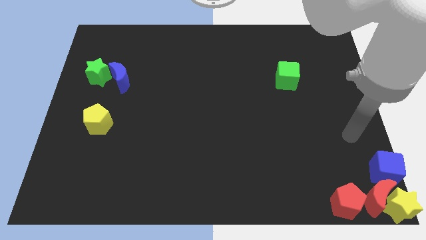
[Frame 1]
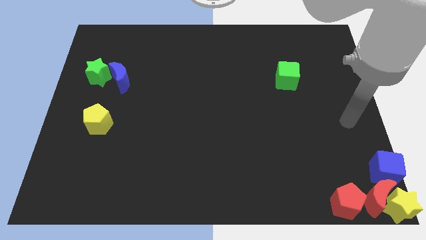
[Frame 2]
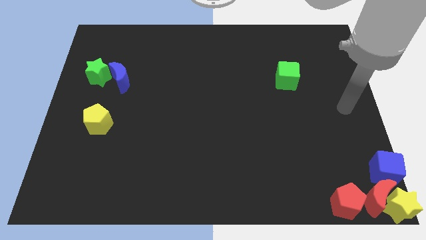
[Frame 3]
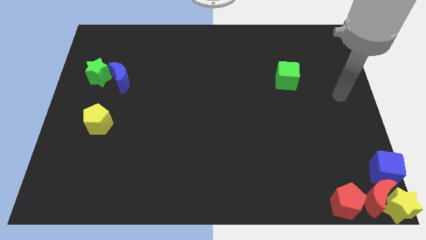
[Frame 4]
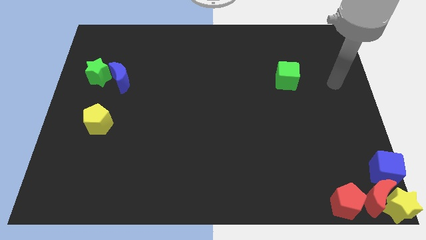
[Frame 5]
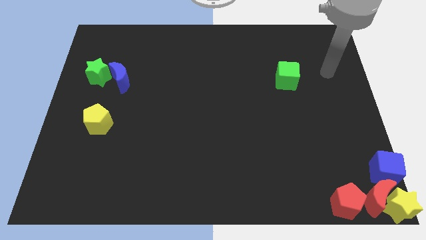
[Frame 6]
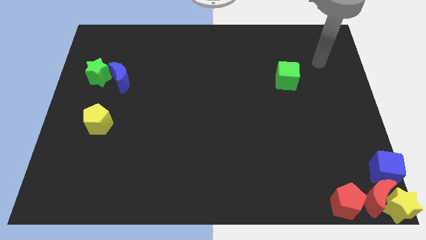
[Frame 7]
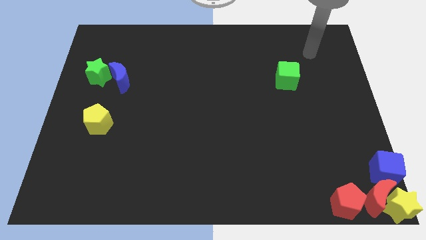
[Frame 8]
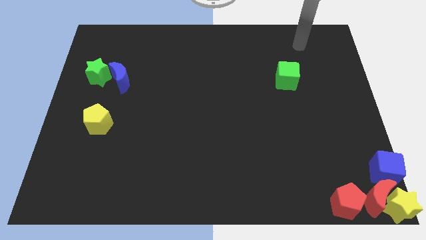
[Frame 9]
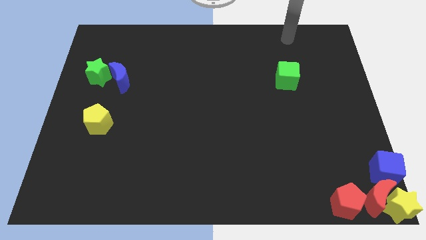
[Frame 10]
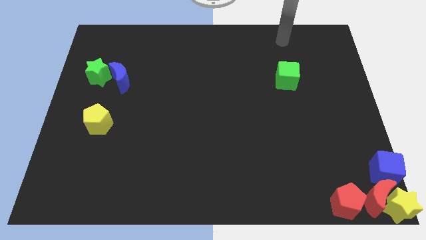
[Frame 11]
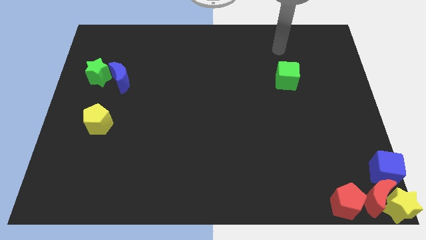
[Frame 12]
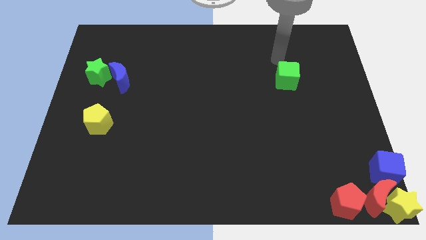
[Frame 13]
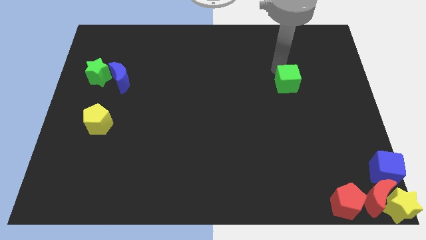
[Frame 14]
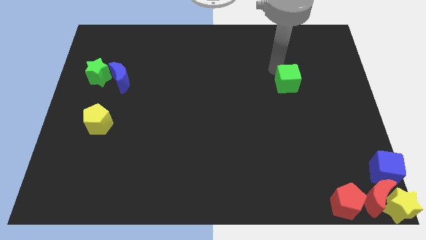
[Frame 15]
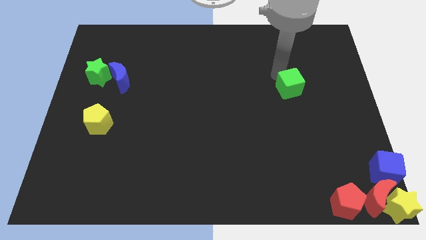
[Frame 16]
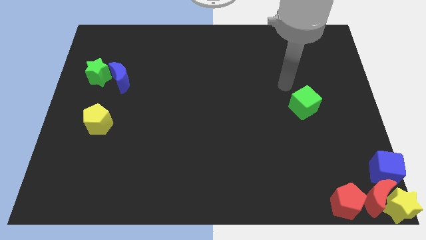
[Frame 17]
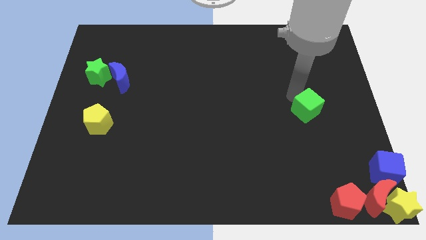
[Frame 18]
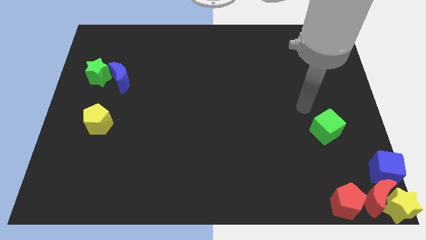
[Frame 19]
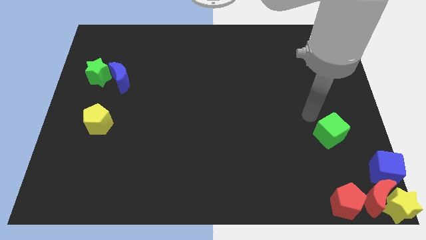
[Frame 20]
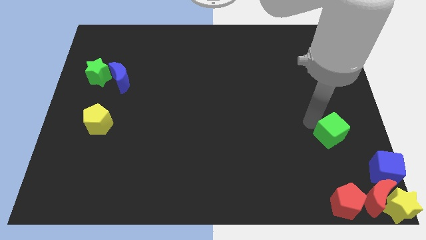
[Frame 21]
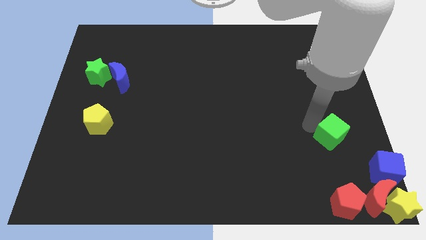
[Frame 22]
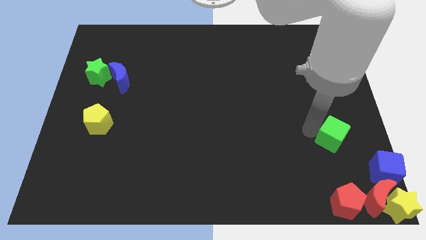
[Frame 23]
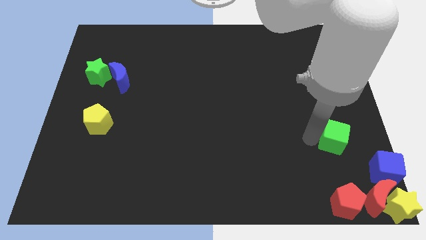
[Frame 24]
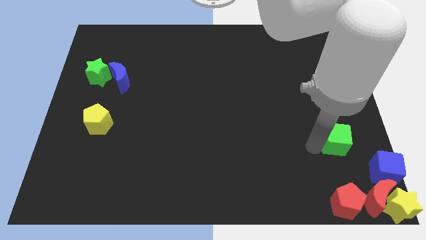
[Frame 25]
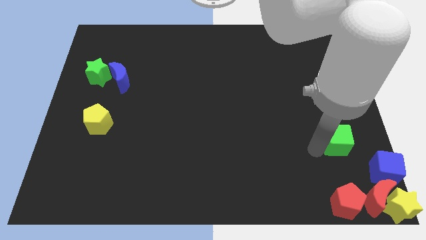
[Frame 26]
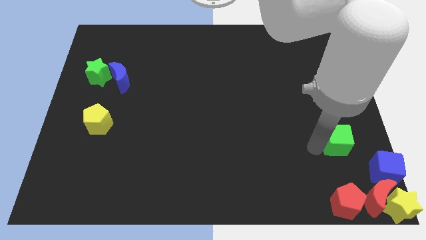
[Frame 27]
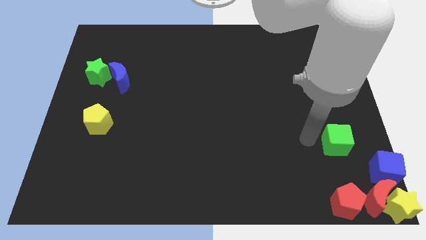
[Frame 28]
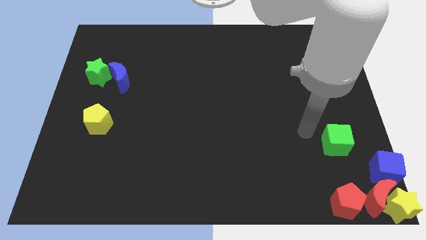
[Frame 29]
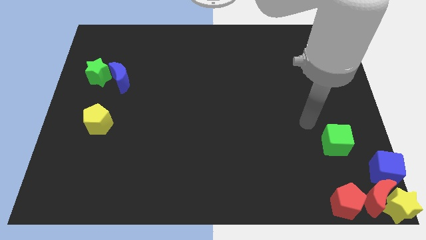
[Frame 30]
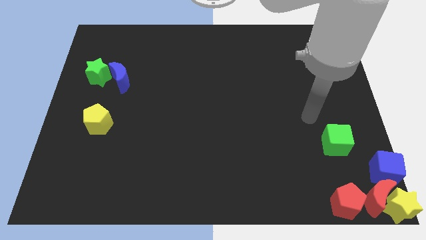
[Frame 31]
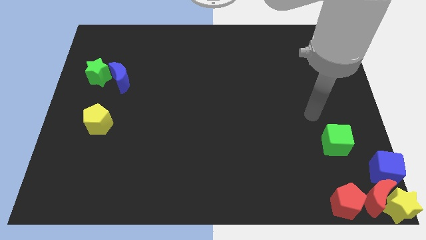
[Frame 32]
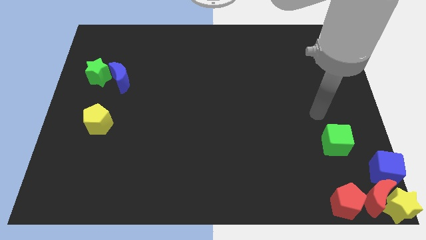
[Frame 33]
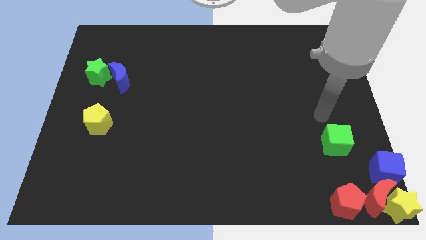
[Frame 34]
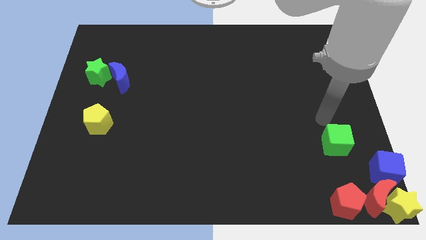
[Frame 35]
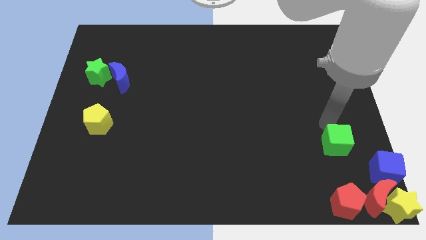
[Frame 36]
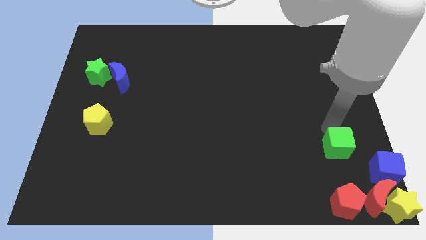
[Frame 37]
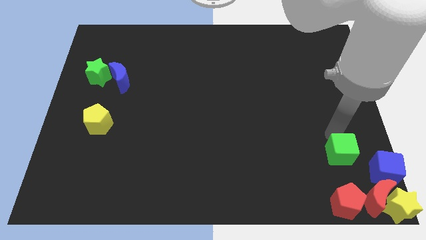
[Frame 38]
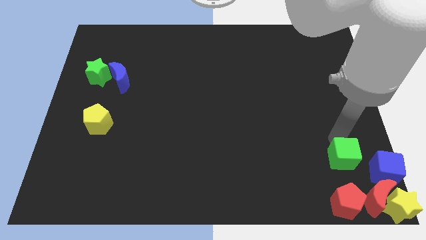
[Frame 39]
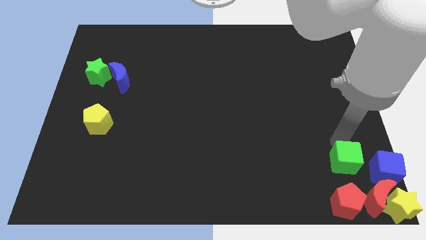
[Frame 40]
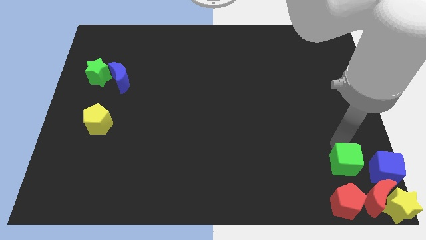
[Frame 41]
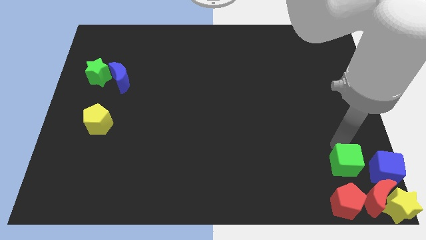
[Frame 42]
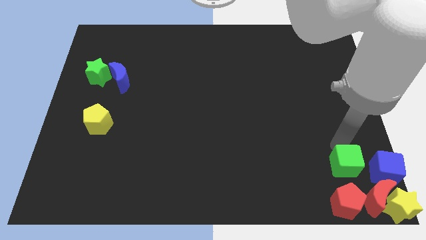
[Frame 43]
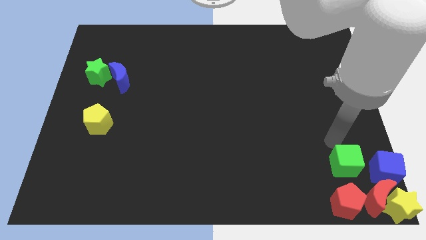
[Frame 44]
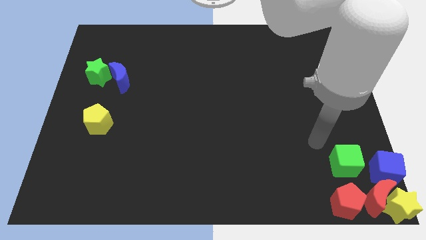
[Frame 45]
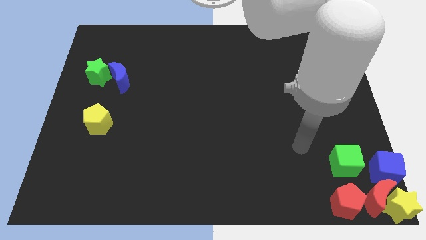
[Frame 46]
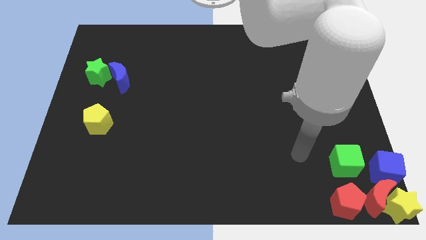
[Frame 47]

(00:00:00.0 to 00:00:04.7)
place the green cube at the top of the red pentagon

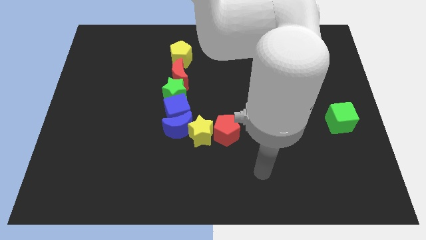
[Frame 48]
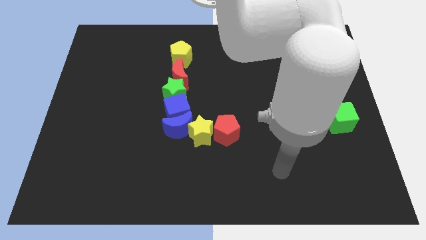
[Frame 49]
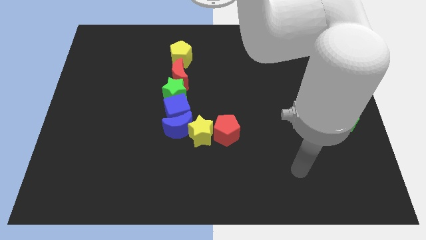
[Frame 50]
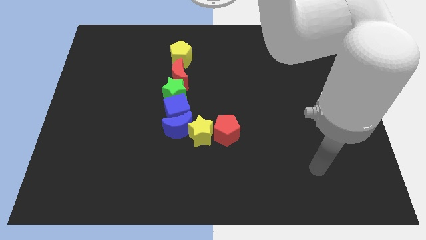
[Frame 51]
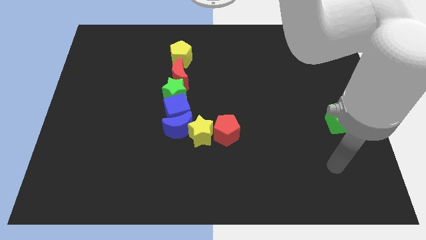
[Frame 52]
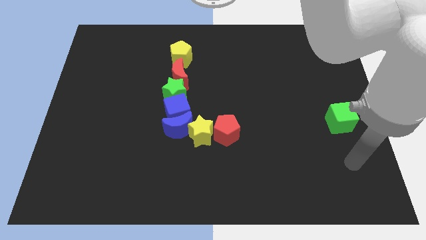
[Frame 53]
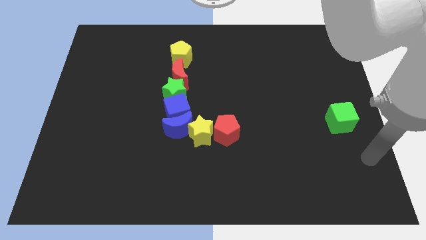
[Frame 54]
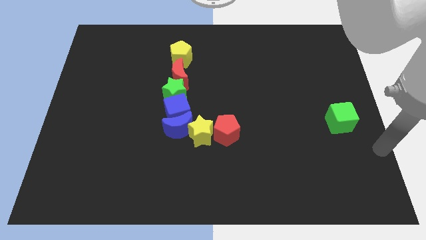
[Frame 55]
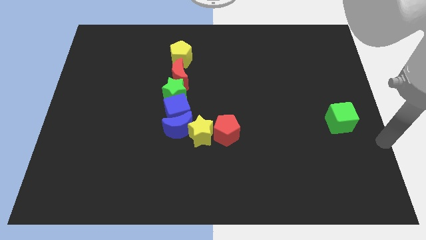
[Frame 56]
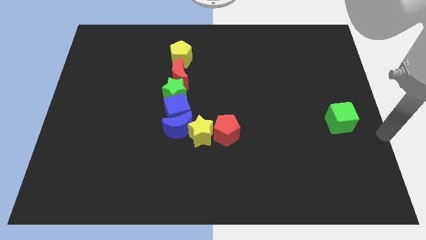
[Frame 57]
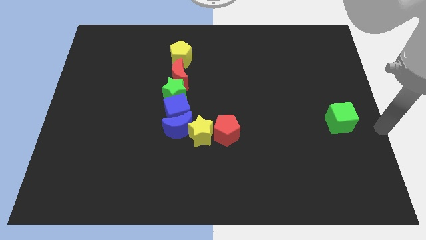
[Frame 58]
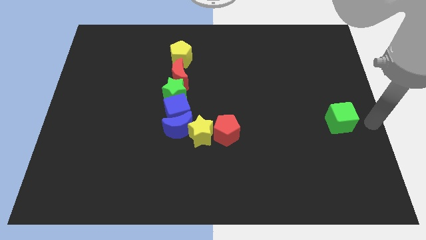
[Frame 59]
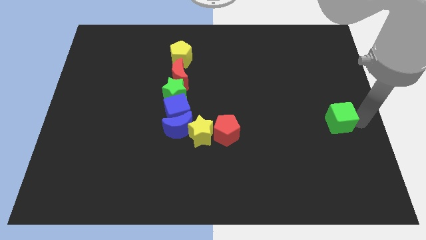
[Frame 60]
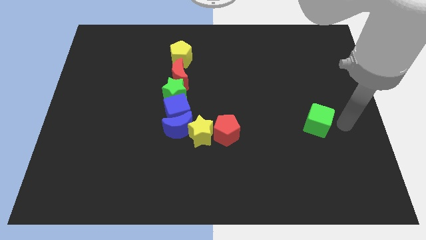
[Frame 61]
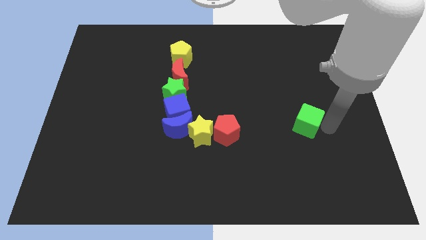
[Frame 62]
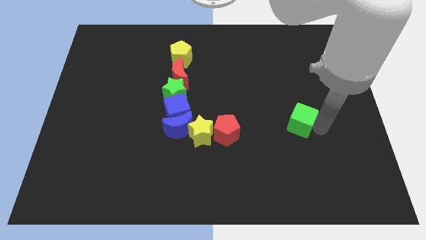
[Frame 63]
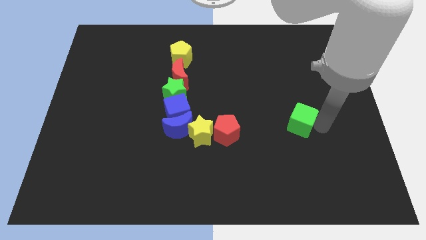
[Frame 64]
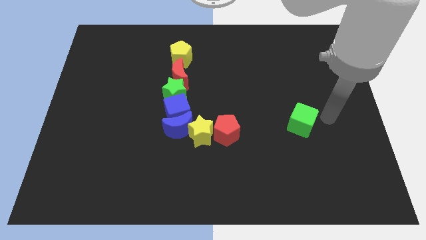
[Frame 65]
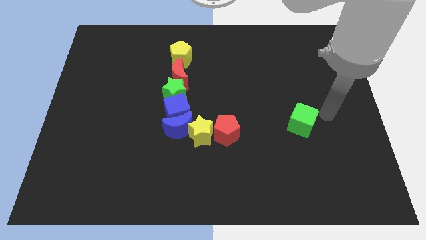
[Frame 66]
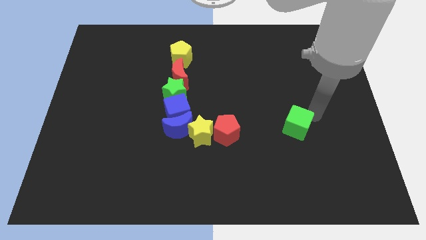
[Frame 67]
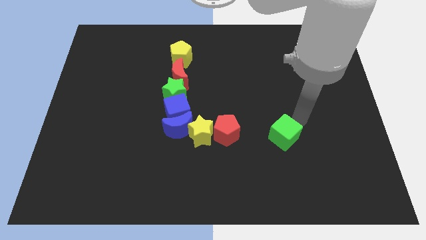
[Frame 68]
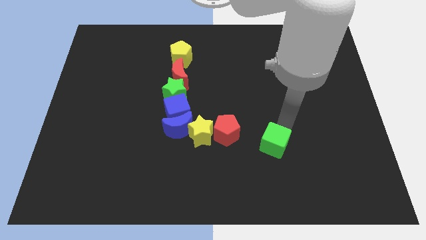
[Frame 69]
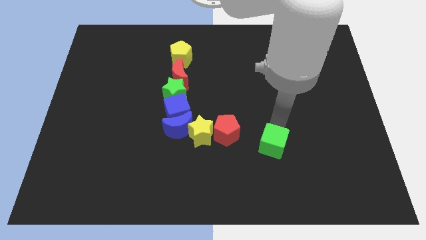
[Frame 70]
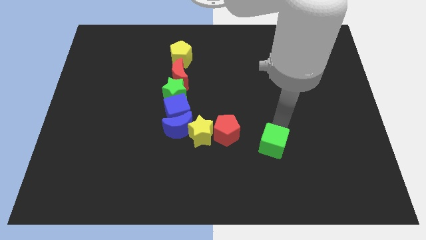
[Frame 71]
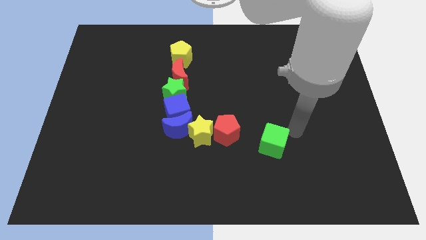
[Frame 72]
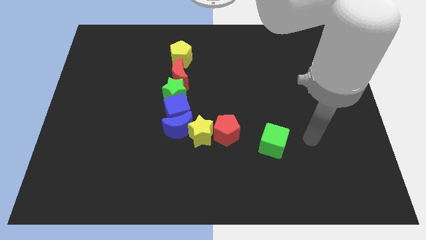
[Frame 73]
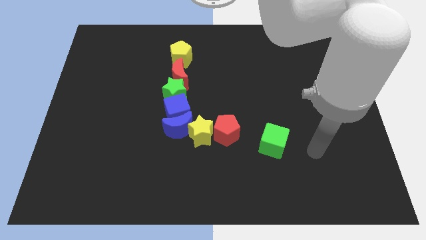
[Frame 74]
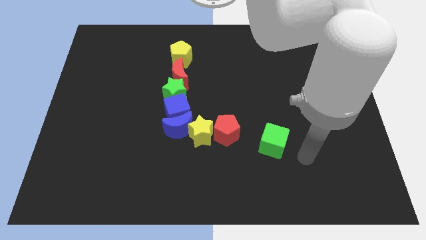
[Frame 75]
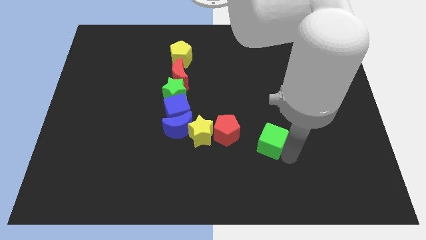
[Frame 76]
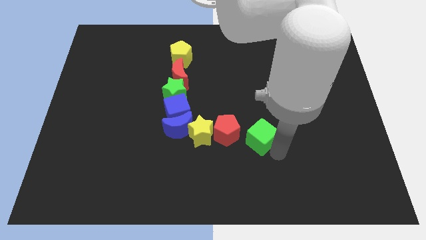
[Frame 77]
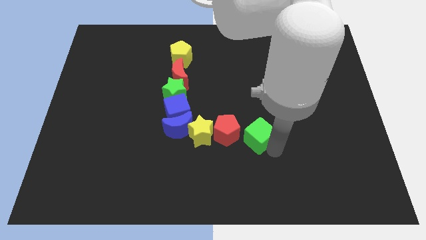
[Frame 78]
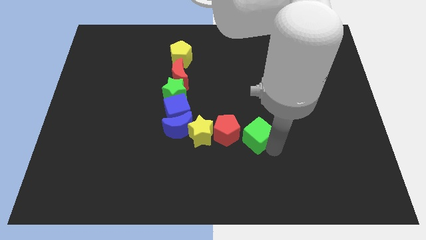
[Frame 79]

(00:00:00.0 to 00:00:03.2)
slide the green cube towards the red pentagon

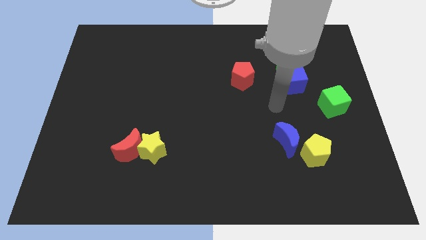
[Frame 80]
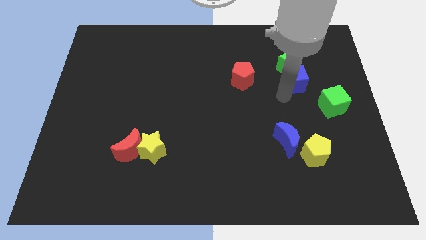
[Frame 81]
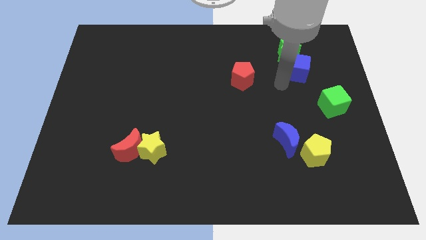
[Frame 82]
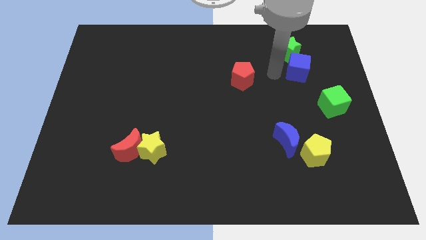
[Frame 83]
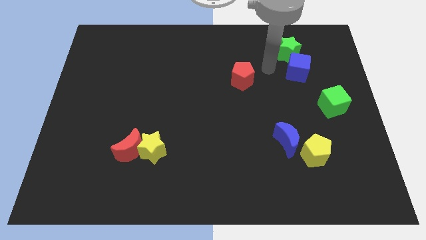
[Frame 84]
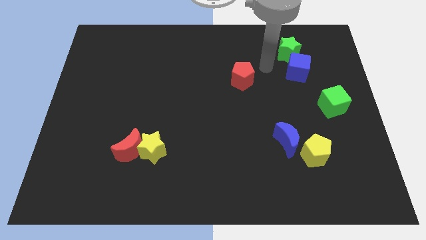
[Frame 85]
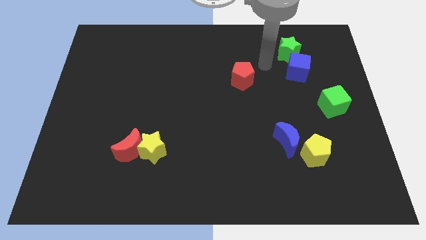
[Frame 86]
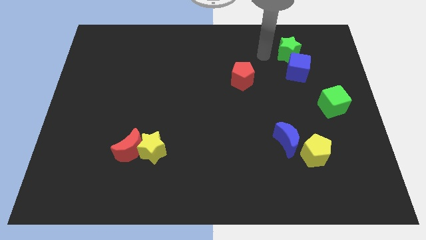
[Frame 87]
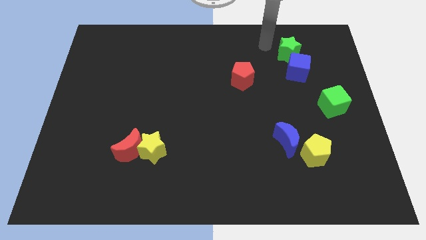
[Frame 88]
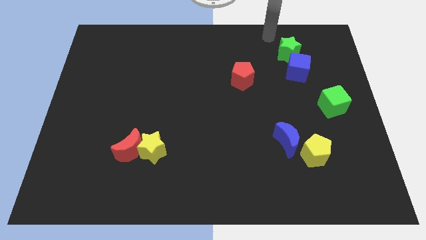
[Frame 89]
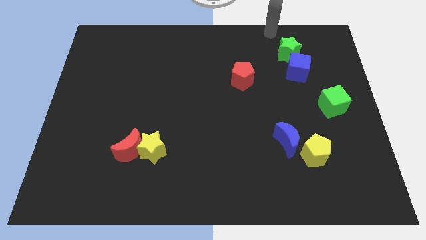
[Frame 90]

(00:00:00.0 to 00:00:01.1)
slide blue cube into green star

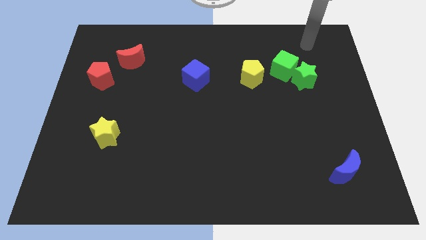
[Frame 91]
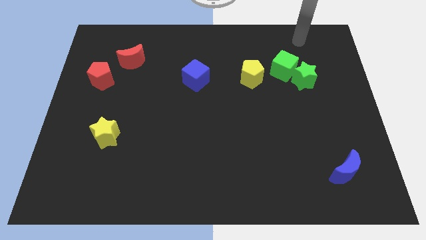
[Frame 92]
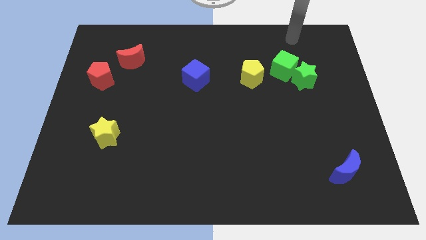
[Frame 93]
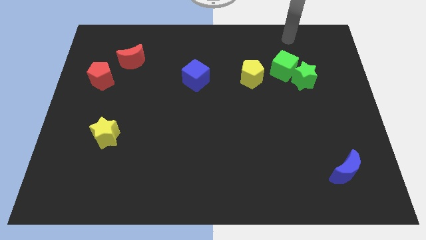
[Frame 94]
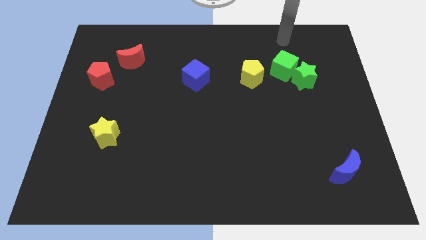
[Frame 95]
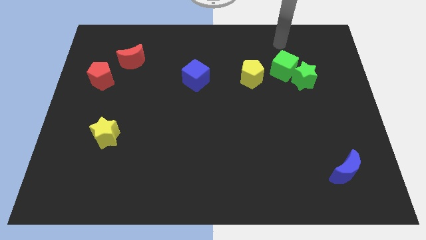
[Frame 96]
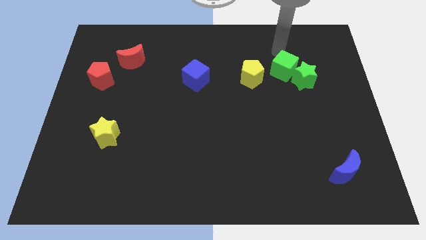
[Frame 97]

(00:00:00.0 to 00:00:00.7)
touch the green cube
